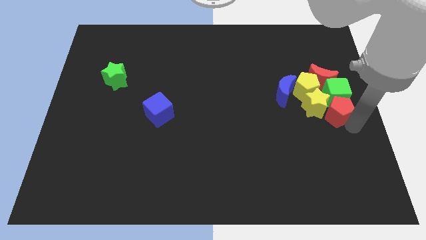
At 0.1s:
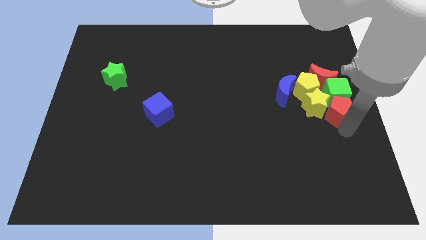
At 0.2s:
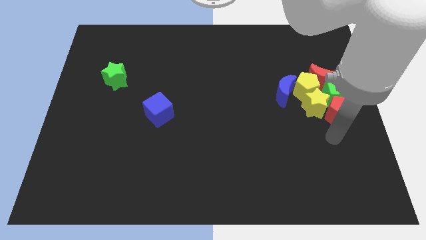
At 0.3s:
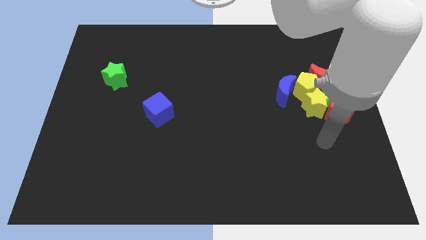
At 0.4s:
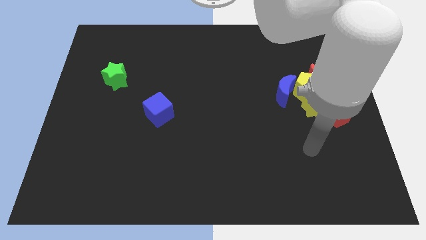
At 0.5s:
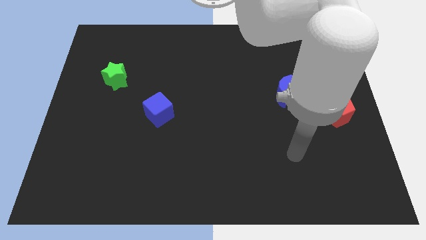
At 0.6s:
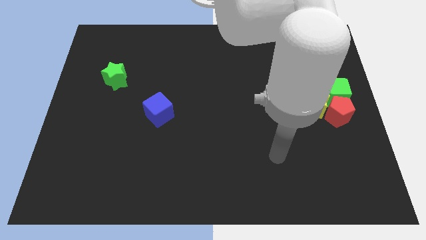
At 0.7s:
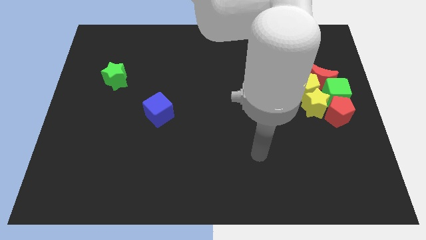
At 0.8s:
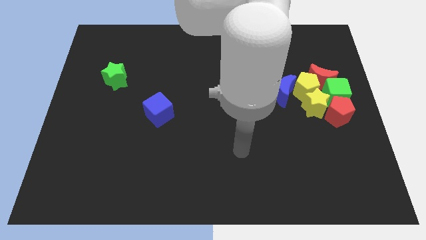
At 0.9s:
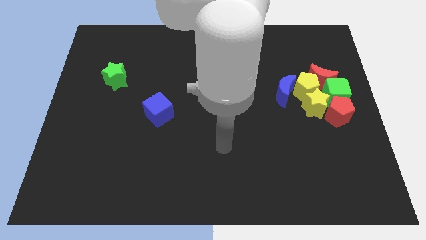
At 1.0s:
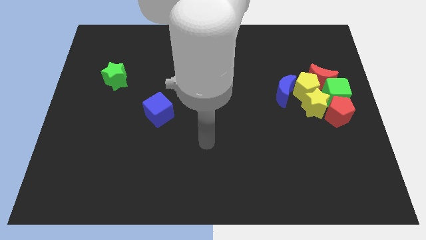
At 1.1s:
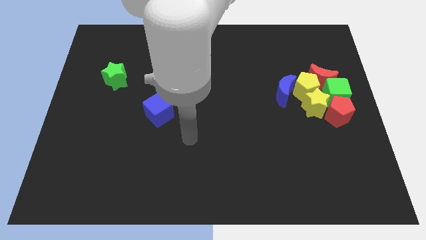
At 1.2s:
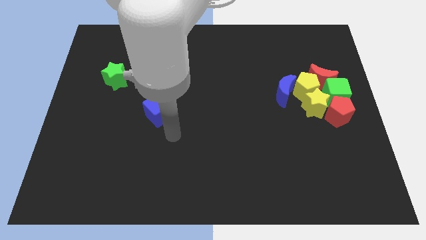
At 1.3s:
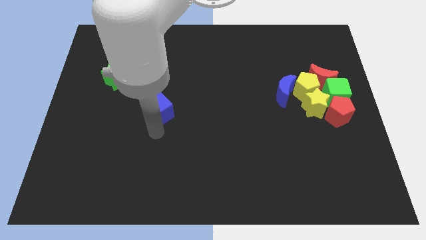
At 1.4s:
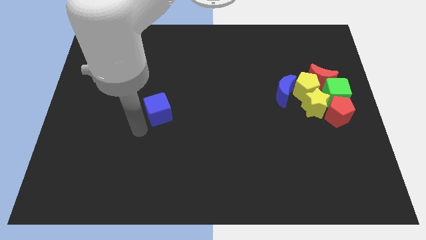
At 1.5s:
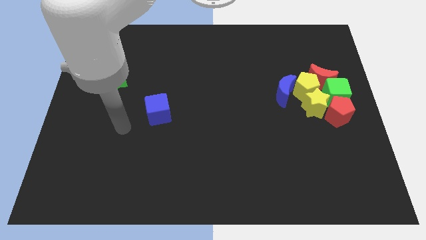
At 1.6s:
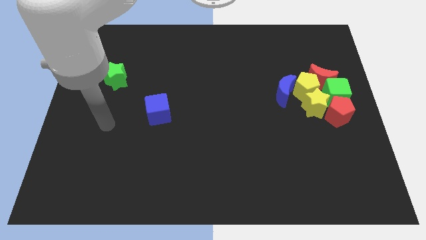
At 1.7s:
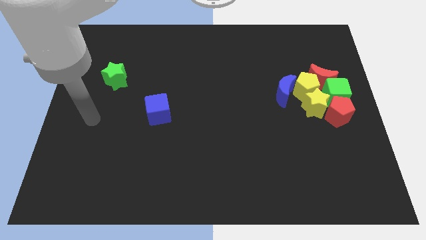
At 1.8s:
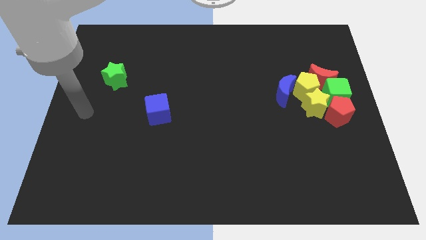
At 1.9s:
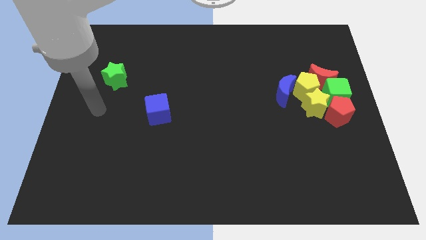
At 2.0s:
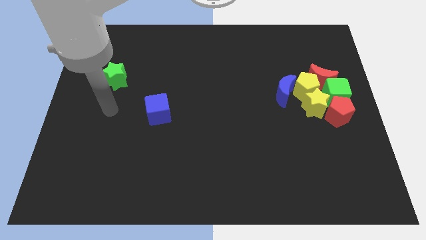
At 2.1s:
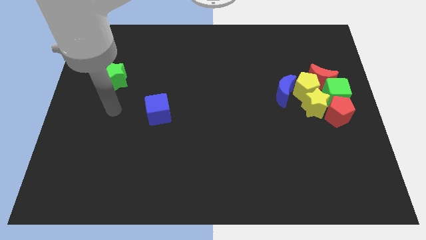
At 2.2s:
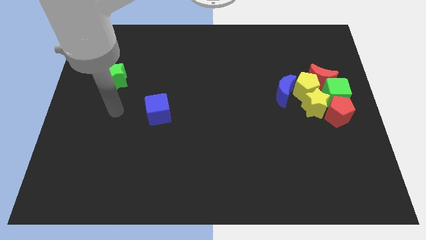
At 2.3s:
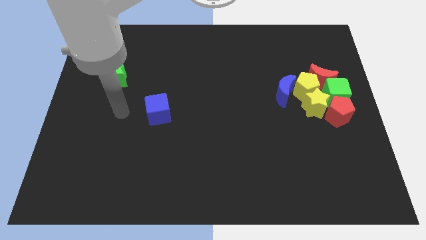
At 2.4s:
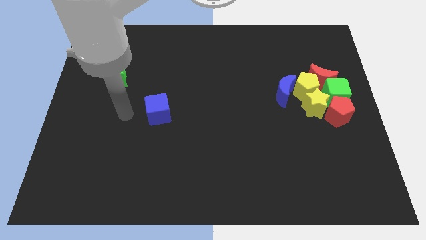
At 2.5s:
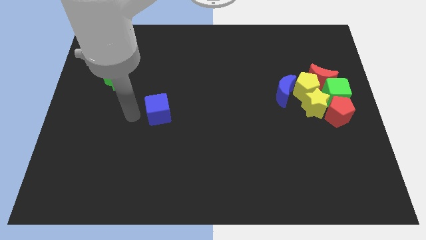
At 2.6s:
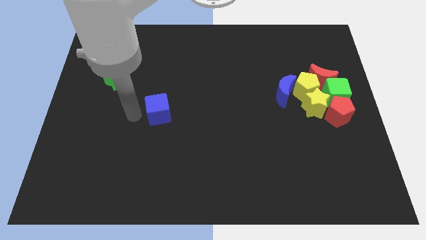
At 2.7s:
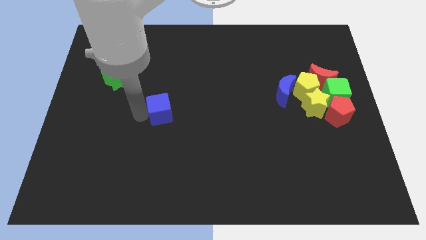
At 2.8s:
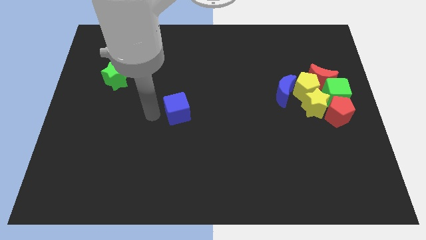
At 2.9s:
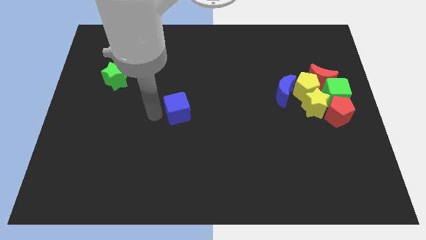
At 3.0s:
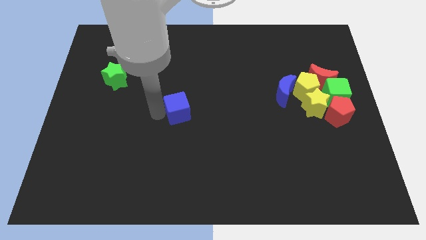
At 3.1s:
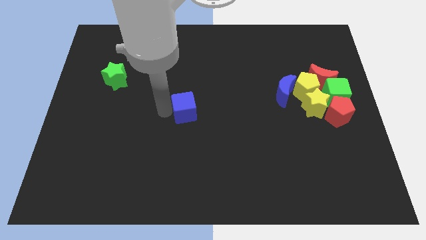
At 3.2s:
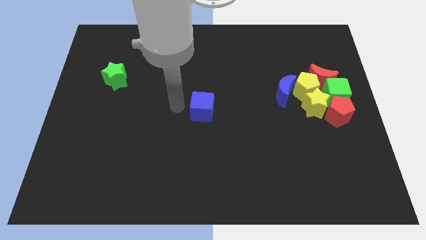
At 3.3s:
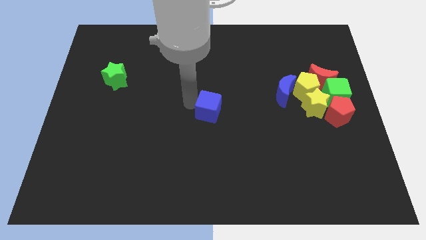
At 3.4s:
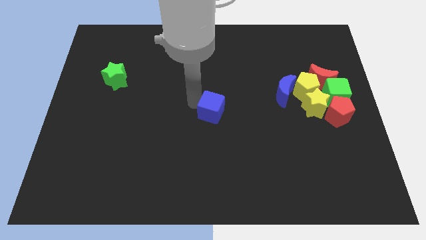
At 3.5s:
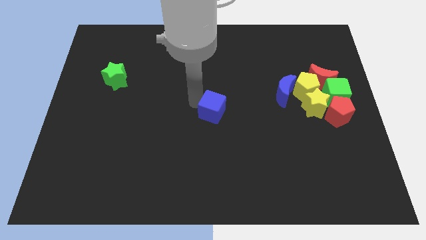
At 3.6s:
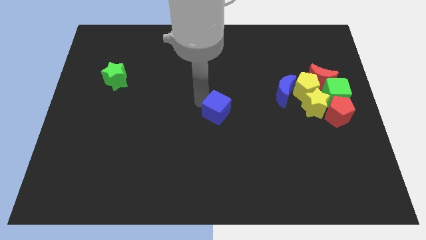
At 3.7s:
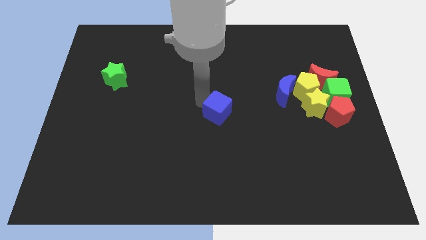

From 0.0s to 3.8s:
move your arm away from the red pentagon

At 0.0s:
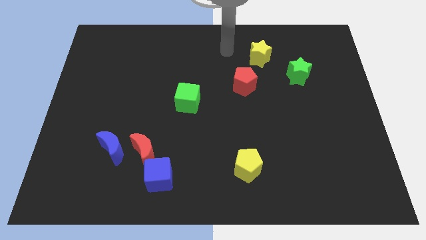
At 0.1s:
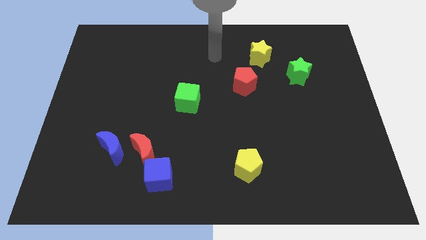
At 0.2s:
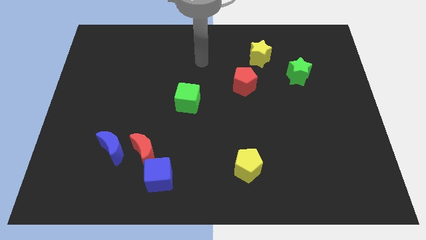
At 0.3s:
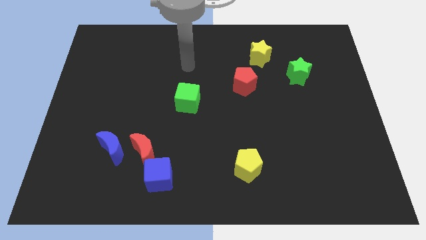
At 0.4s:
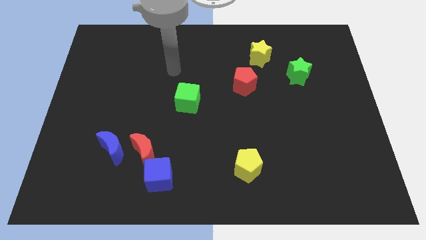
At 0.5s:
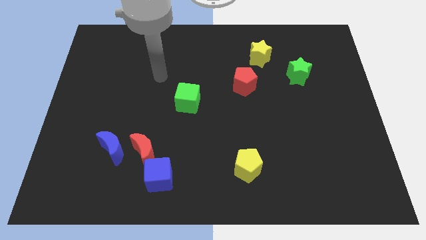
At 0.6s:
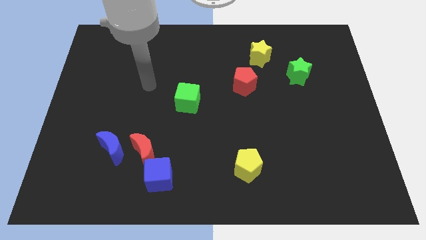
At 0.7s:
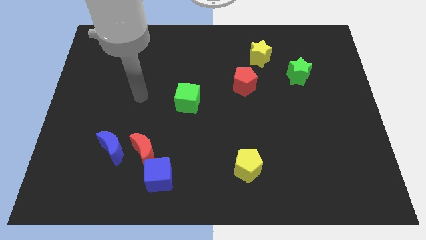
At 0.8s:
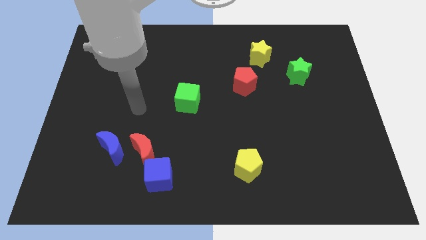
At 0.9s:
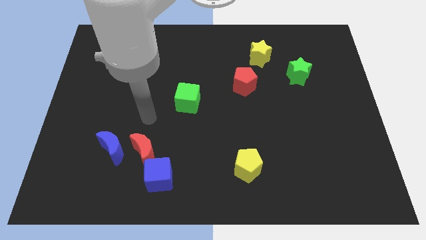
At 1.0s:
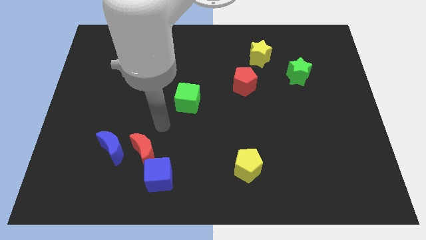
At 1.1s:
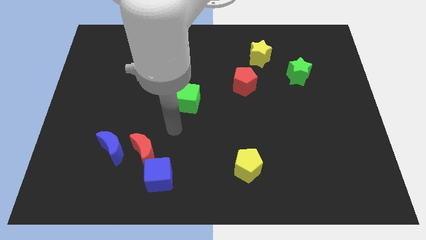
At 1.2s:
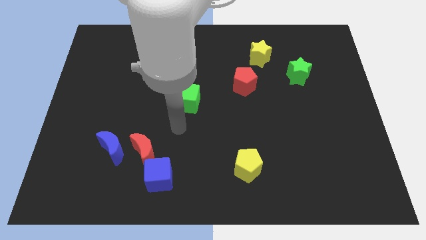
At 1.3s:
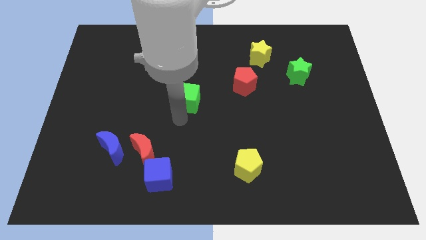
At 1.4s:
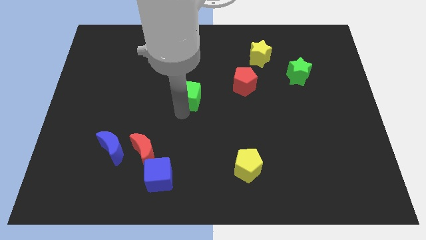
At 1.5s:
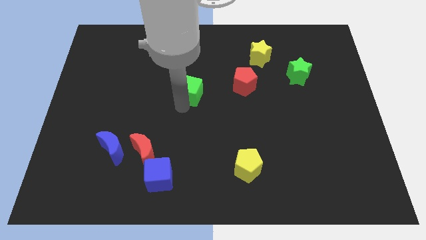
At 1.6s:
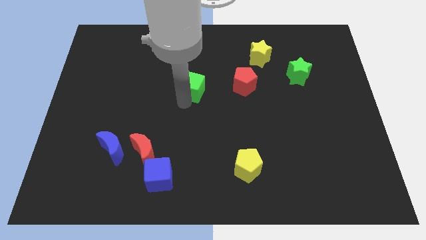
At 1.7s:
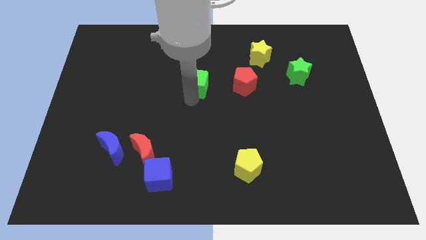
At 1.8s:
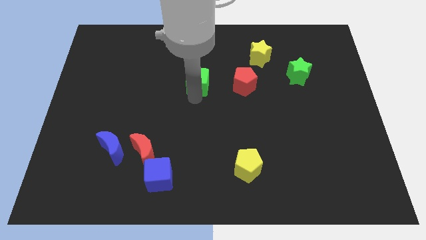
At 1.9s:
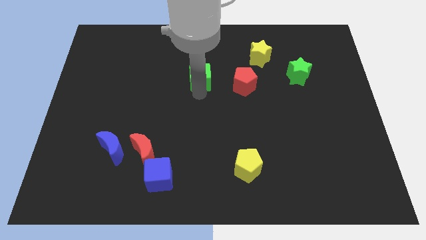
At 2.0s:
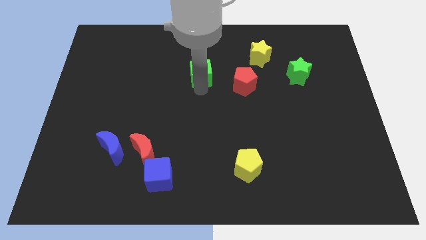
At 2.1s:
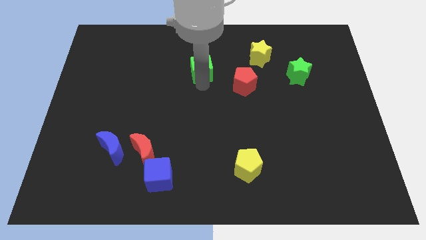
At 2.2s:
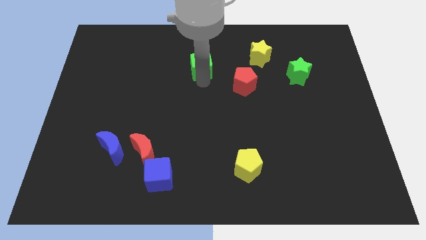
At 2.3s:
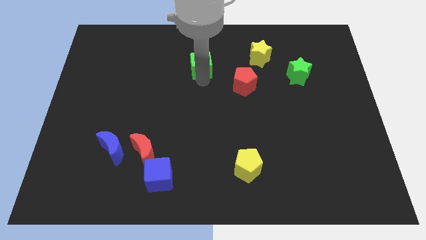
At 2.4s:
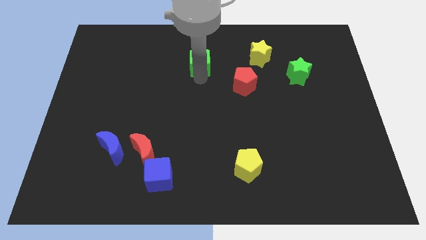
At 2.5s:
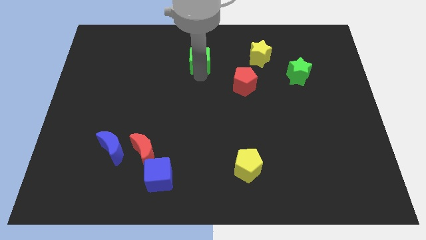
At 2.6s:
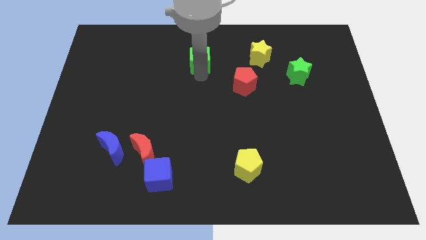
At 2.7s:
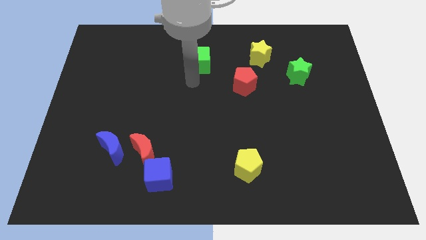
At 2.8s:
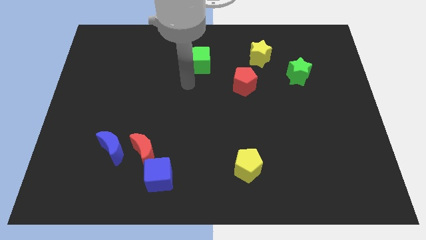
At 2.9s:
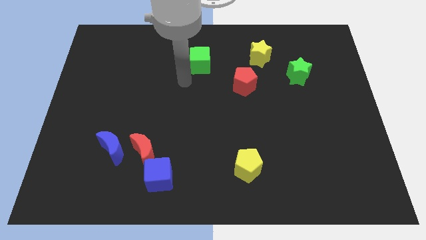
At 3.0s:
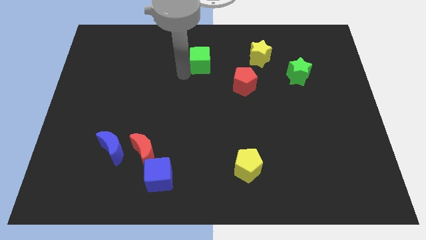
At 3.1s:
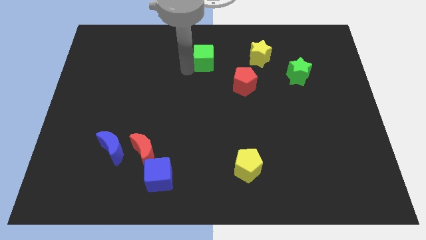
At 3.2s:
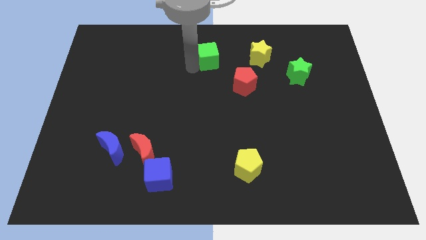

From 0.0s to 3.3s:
place the green cube parallel to the yellow star

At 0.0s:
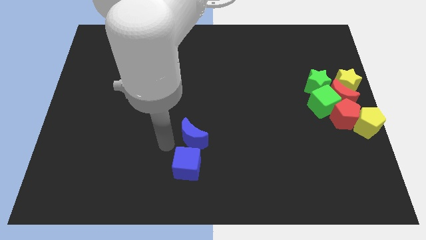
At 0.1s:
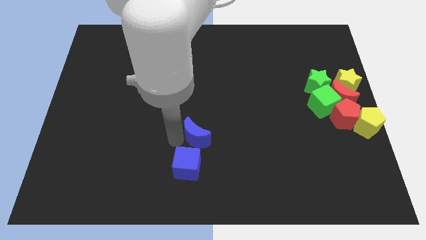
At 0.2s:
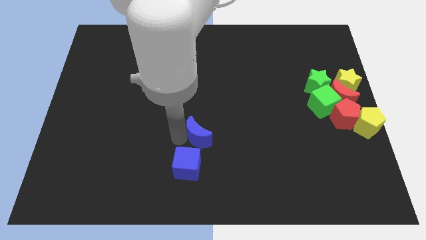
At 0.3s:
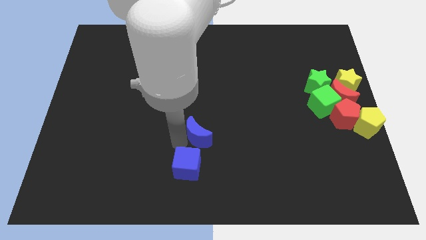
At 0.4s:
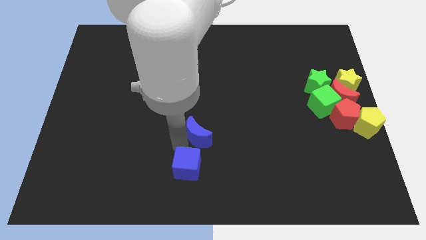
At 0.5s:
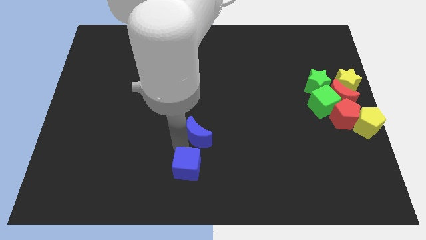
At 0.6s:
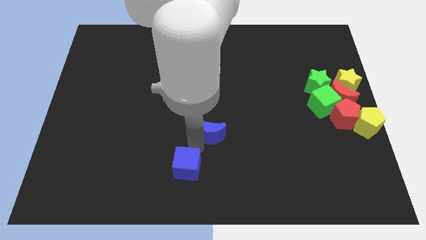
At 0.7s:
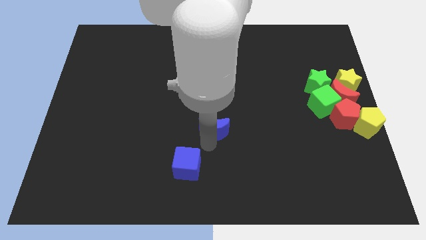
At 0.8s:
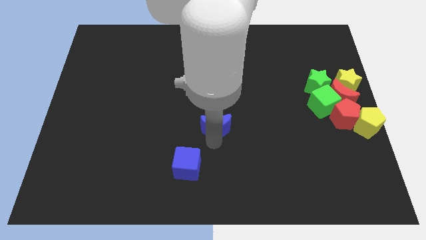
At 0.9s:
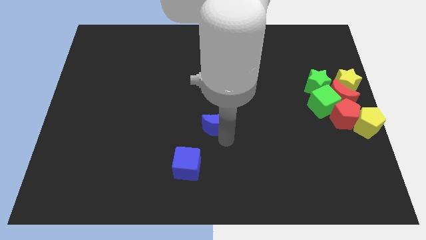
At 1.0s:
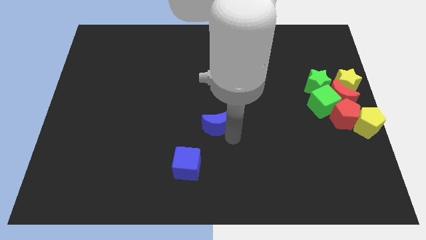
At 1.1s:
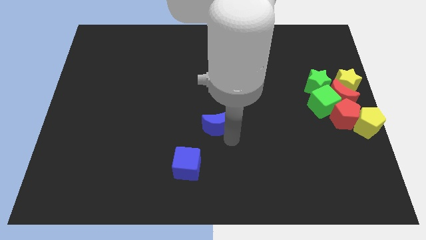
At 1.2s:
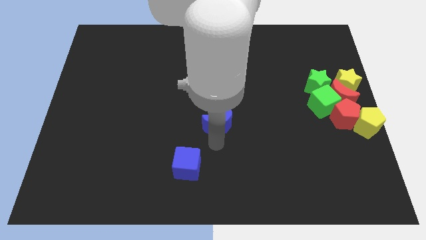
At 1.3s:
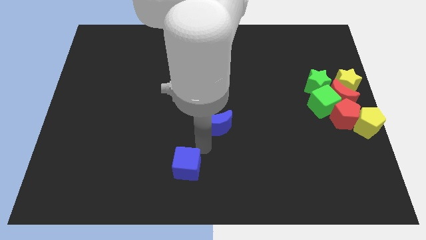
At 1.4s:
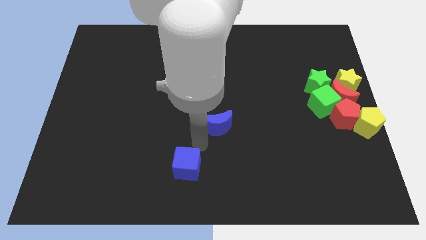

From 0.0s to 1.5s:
separate blue cube and blue moon

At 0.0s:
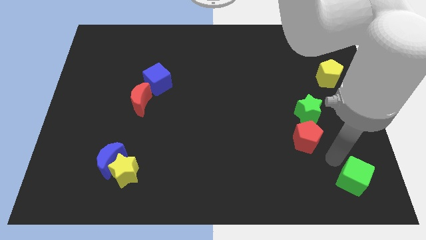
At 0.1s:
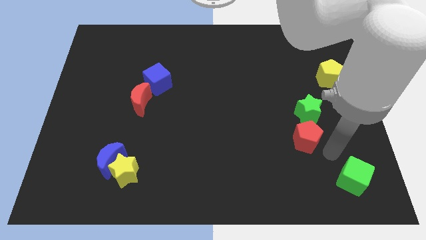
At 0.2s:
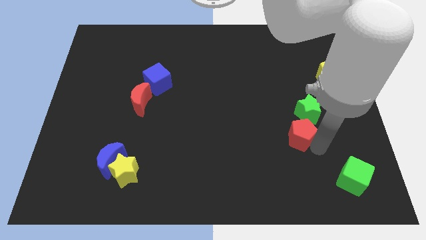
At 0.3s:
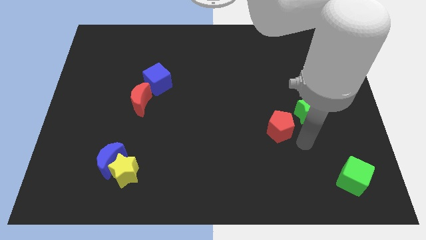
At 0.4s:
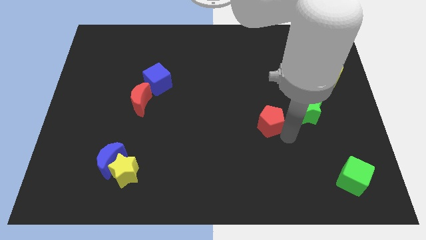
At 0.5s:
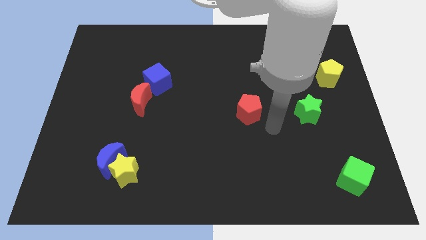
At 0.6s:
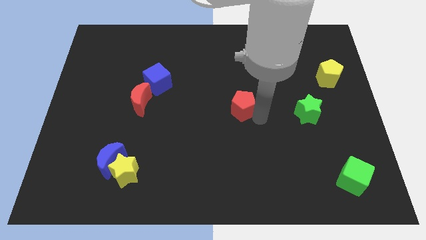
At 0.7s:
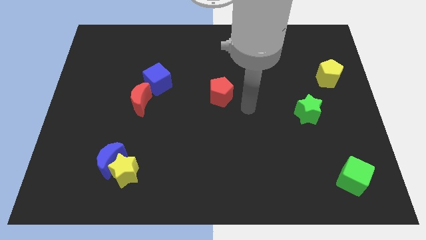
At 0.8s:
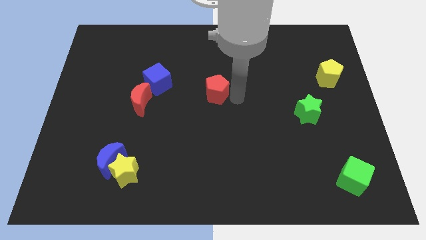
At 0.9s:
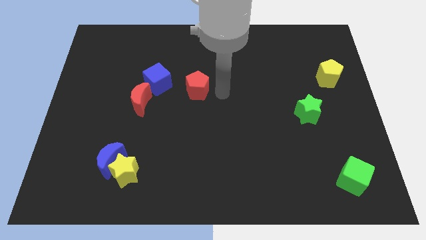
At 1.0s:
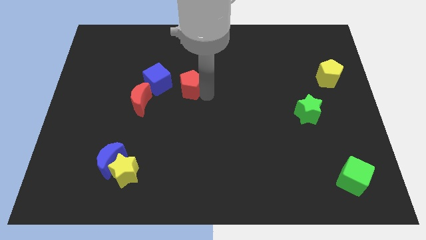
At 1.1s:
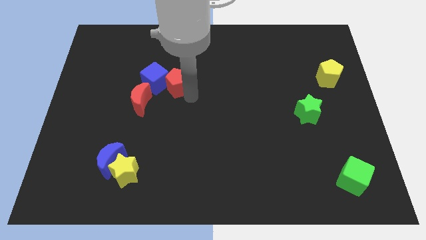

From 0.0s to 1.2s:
place the red pentagon right to the blue cube
